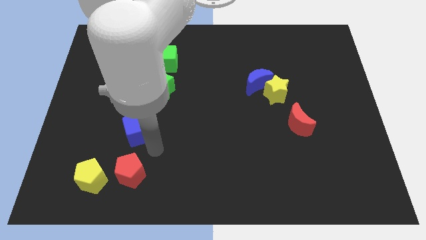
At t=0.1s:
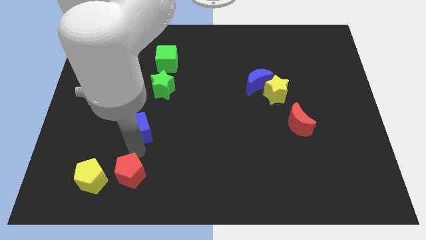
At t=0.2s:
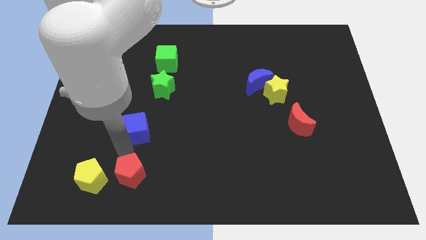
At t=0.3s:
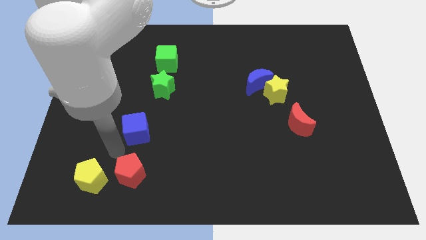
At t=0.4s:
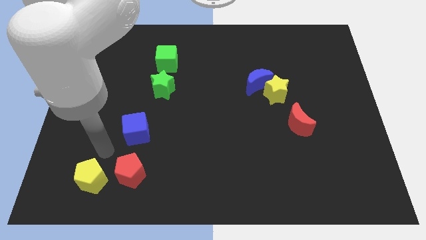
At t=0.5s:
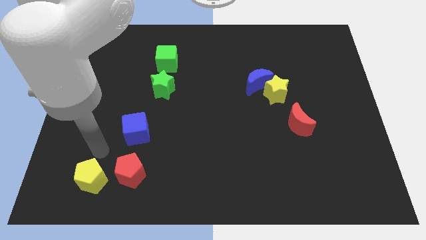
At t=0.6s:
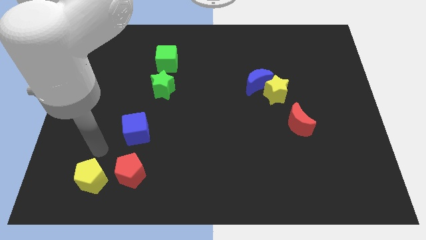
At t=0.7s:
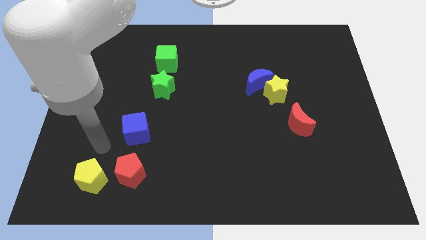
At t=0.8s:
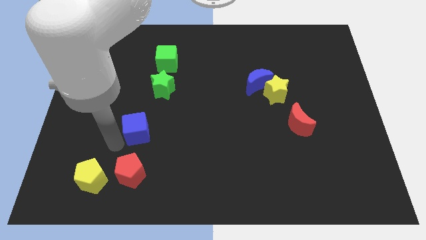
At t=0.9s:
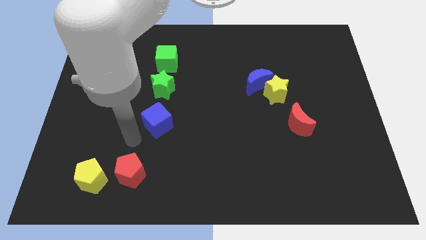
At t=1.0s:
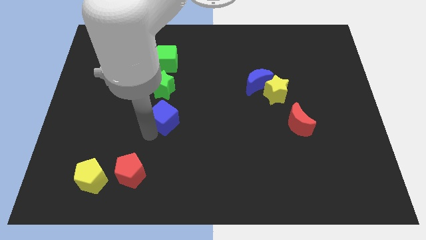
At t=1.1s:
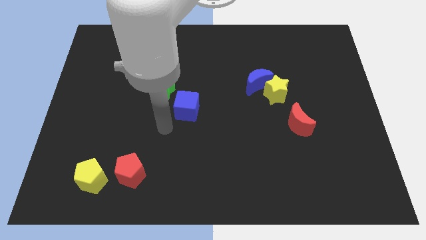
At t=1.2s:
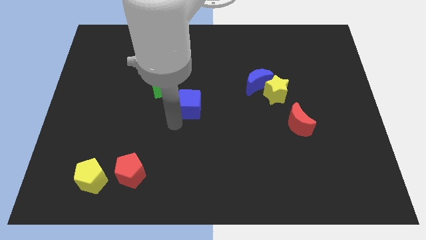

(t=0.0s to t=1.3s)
push blue cube to the bottom right of green star

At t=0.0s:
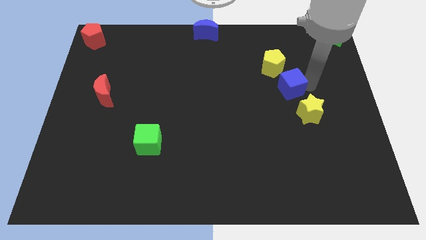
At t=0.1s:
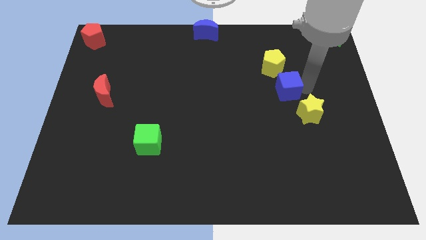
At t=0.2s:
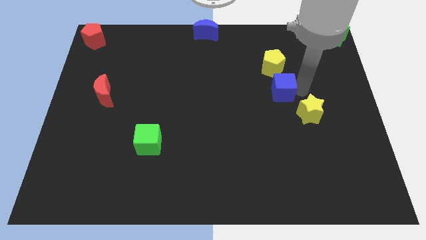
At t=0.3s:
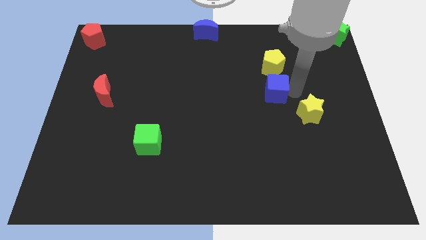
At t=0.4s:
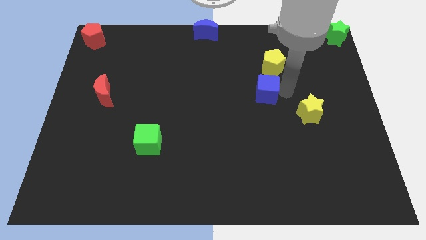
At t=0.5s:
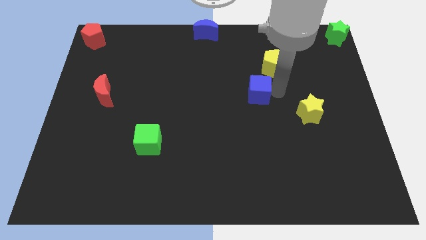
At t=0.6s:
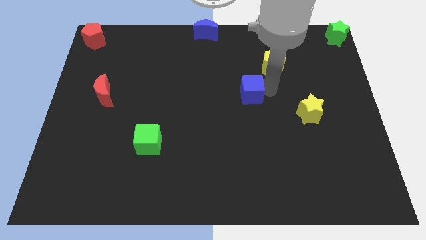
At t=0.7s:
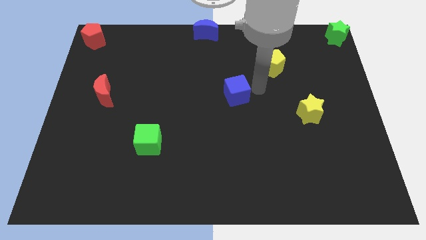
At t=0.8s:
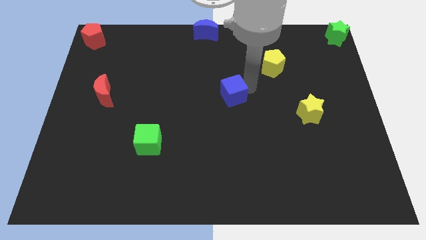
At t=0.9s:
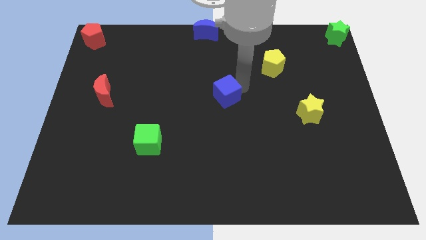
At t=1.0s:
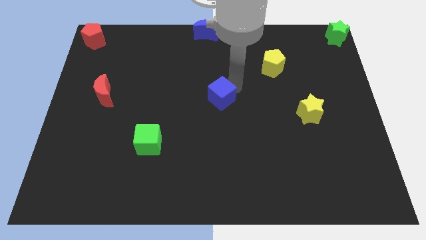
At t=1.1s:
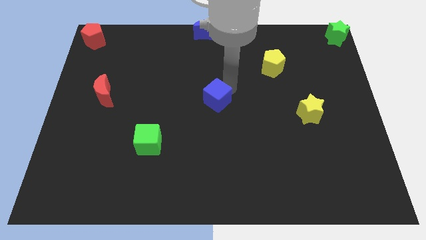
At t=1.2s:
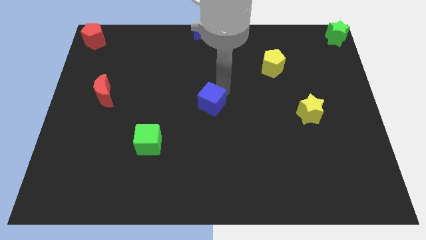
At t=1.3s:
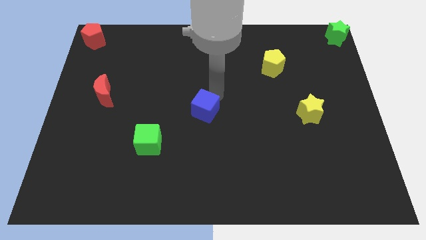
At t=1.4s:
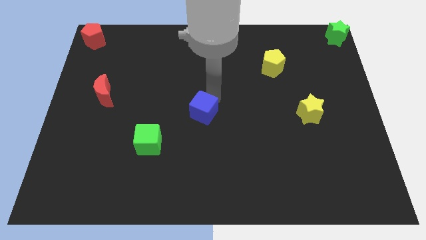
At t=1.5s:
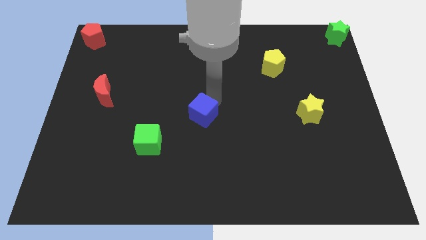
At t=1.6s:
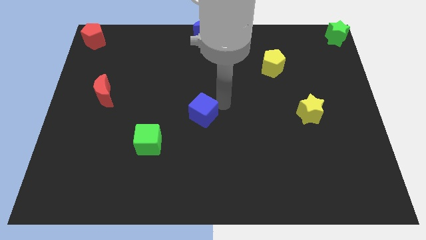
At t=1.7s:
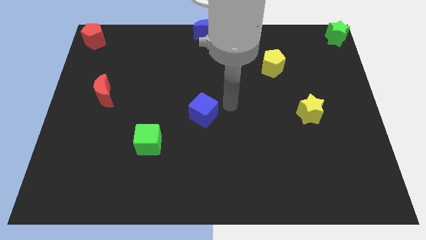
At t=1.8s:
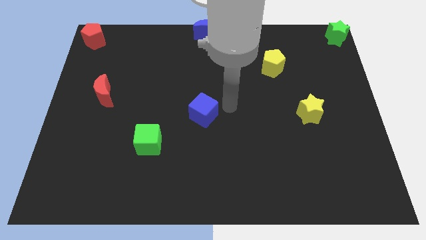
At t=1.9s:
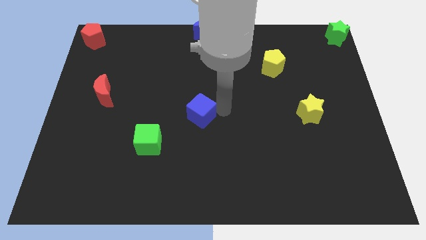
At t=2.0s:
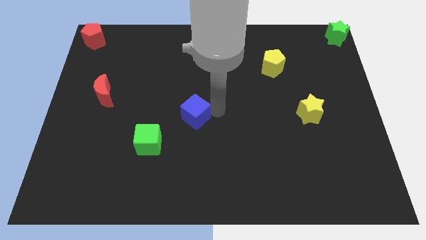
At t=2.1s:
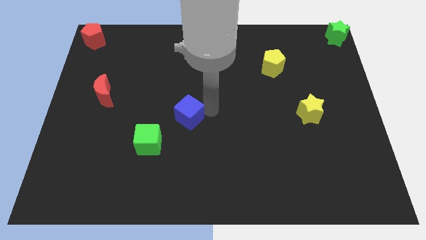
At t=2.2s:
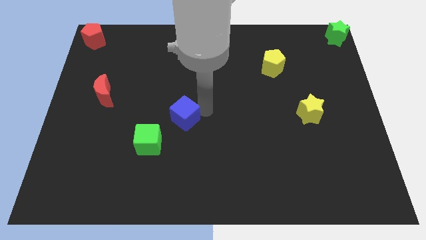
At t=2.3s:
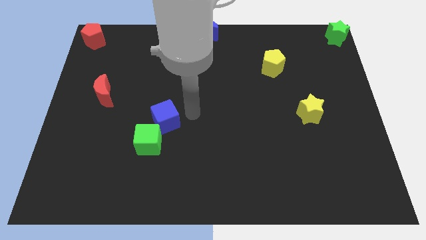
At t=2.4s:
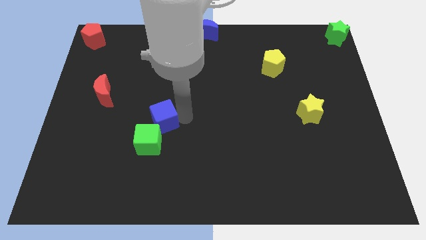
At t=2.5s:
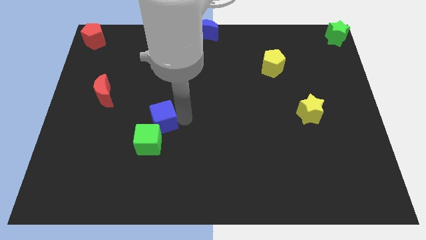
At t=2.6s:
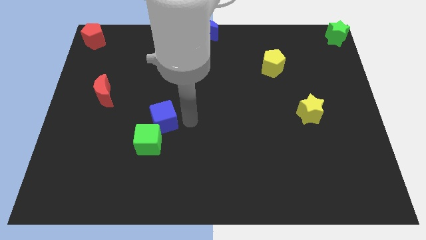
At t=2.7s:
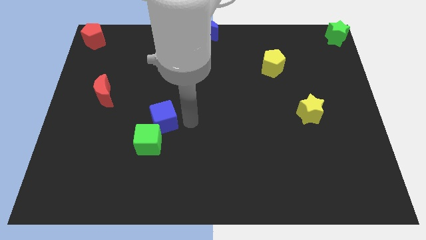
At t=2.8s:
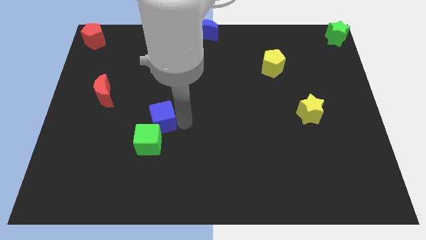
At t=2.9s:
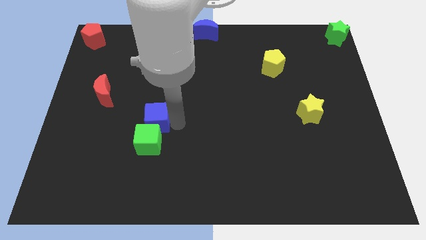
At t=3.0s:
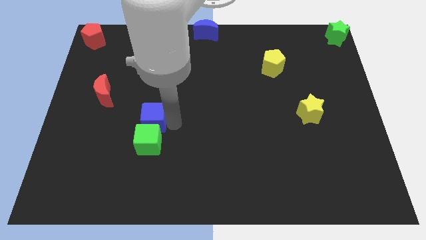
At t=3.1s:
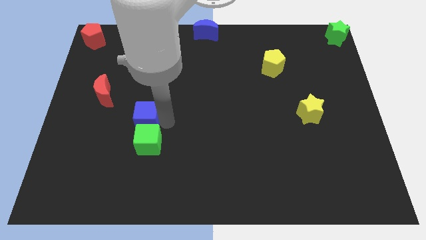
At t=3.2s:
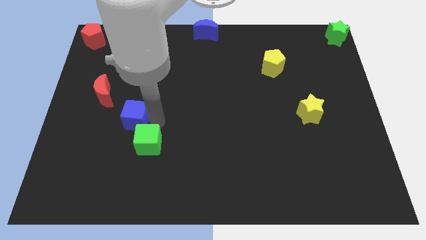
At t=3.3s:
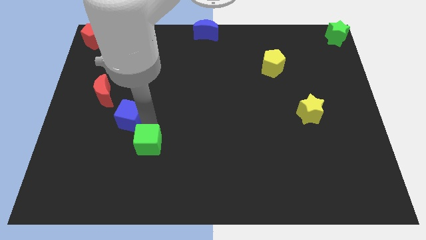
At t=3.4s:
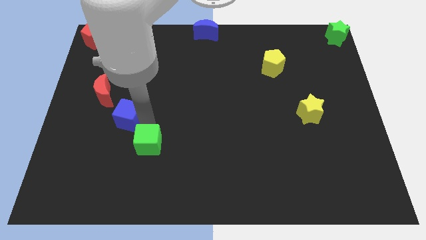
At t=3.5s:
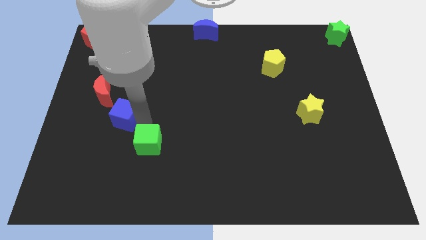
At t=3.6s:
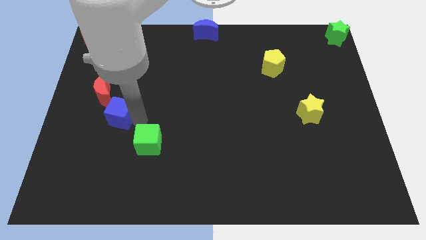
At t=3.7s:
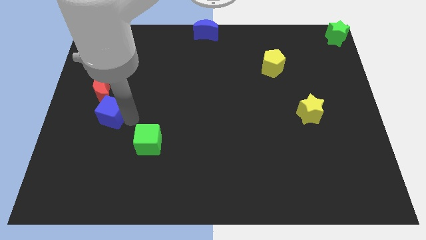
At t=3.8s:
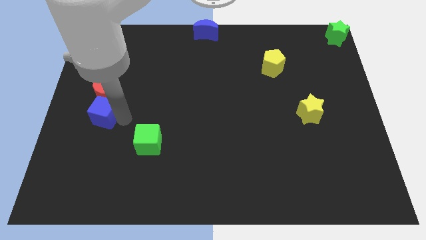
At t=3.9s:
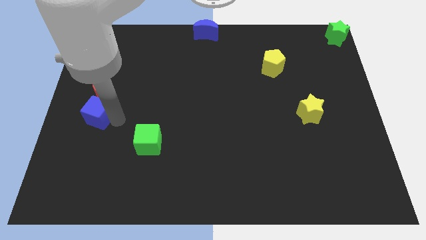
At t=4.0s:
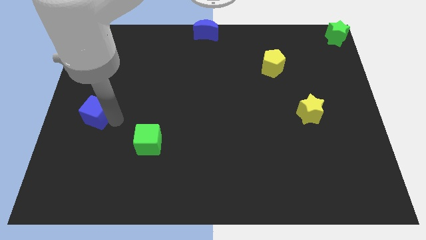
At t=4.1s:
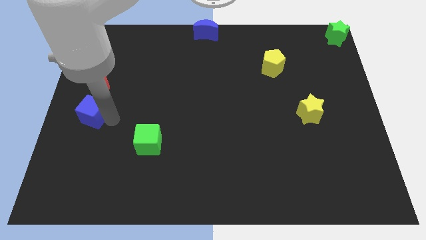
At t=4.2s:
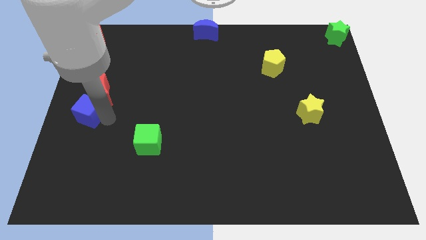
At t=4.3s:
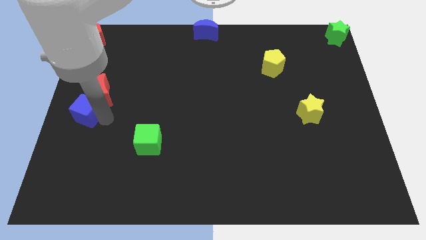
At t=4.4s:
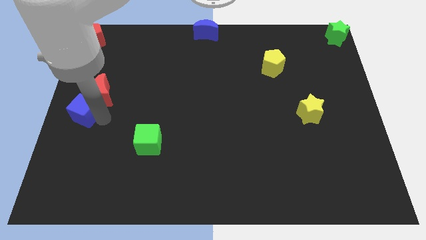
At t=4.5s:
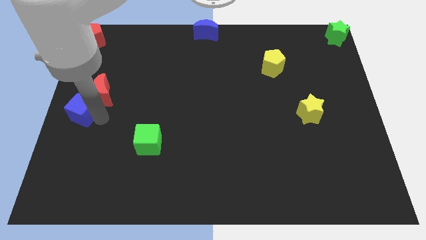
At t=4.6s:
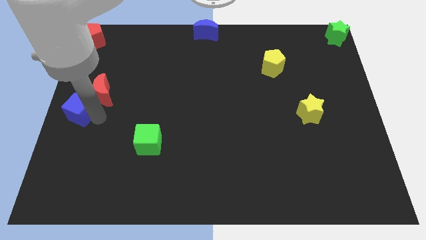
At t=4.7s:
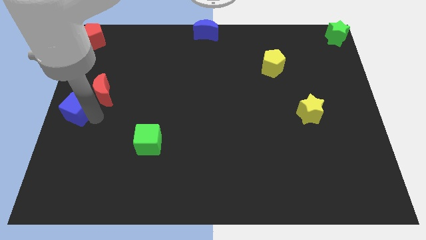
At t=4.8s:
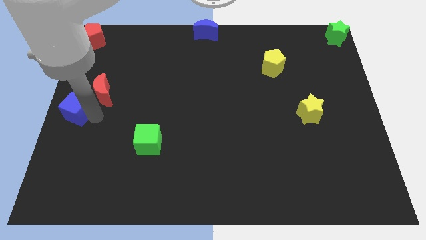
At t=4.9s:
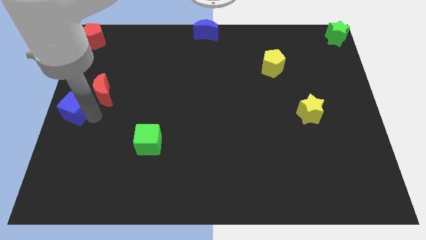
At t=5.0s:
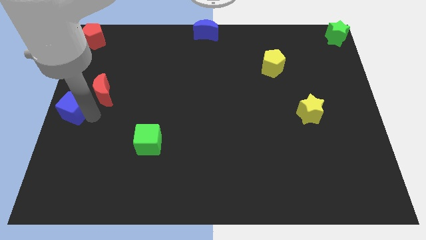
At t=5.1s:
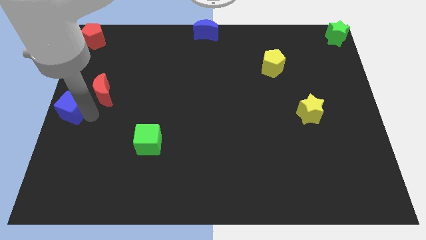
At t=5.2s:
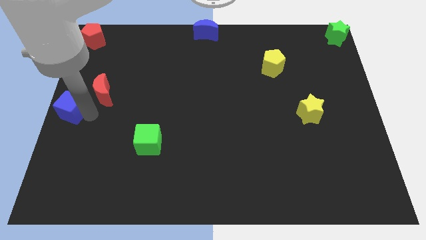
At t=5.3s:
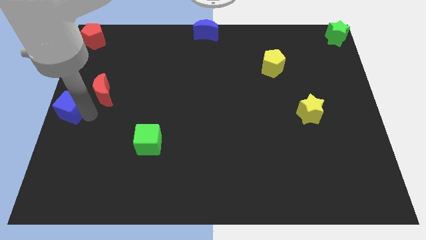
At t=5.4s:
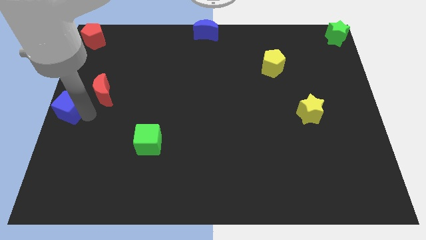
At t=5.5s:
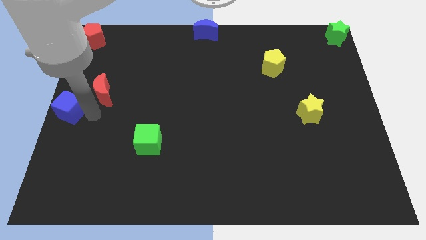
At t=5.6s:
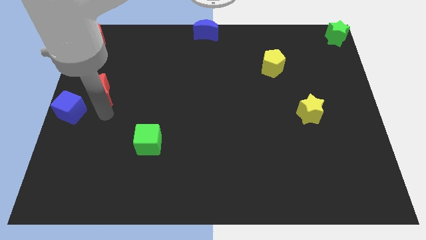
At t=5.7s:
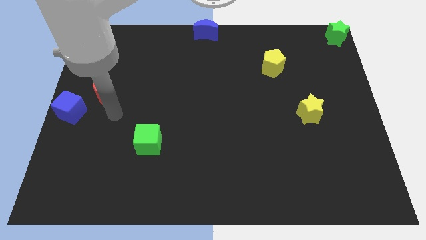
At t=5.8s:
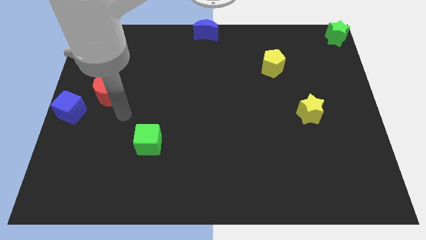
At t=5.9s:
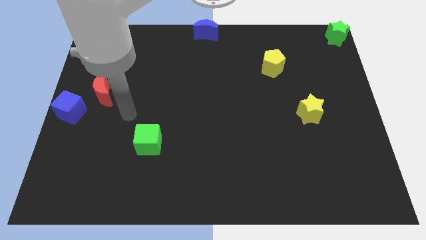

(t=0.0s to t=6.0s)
push the blue cube towards left center of the board

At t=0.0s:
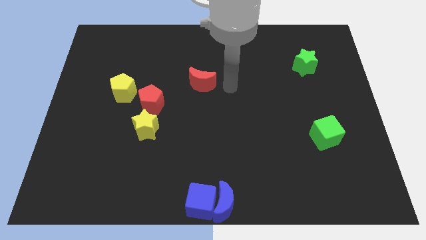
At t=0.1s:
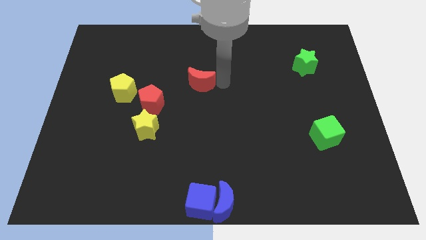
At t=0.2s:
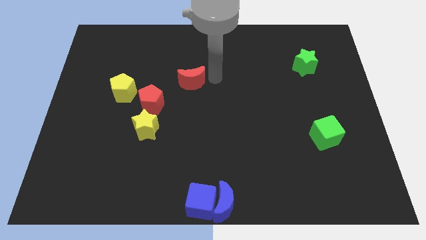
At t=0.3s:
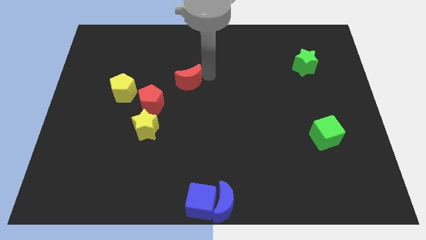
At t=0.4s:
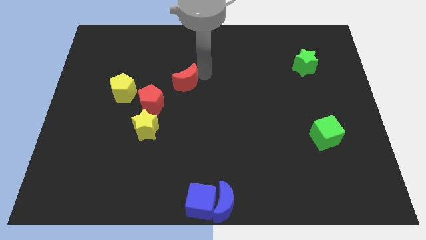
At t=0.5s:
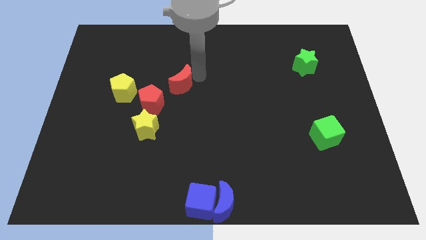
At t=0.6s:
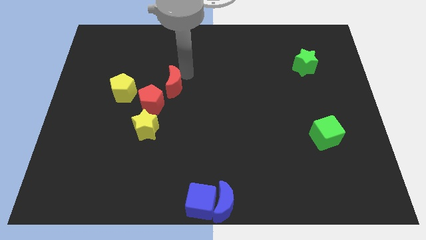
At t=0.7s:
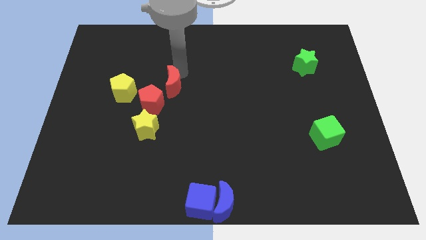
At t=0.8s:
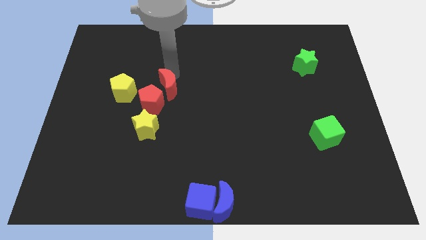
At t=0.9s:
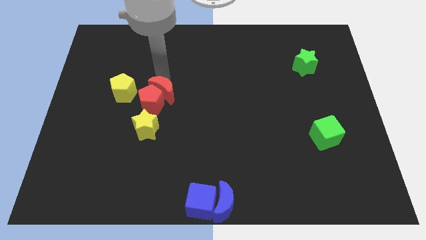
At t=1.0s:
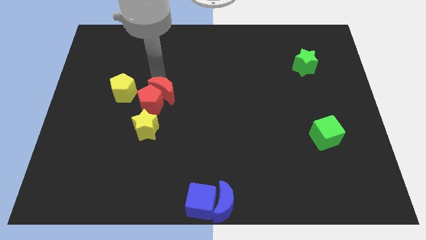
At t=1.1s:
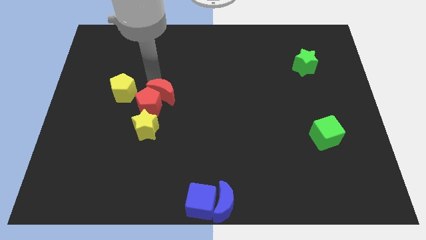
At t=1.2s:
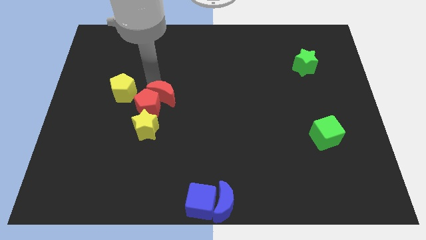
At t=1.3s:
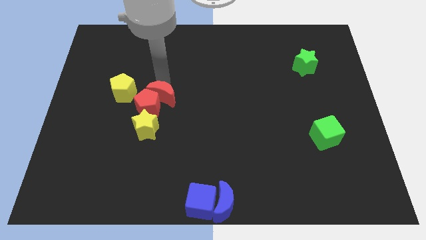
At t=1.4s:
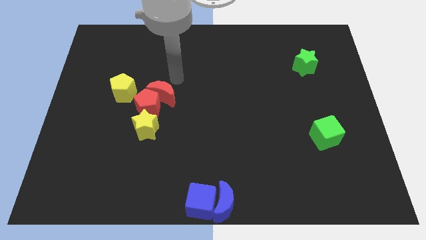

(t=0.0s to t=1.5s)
move the red moon into the red pentagon

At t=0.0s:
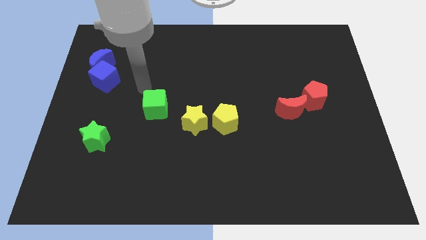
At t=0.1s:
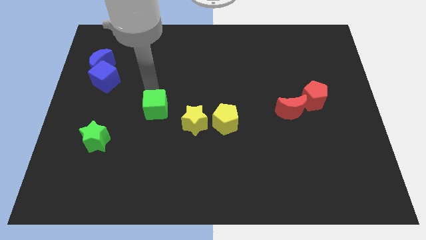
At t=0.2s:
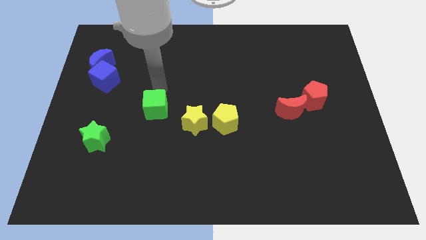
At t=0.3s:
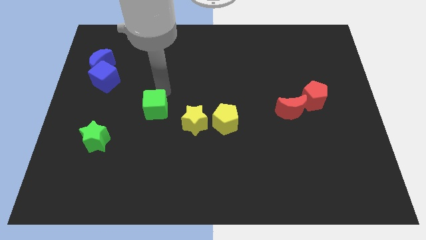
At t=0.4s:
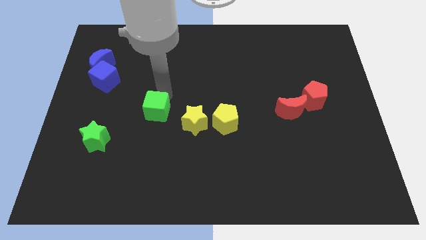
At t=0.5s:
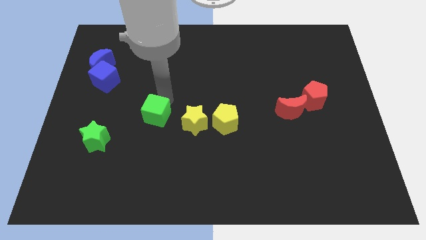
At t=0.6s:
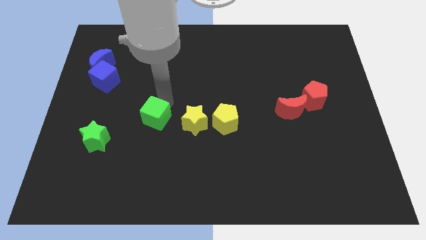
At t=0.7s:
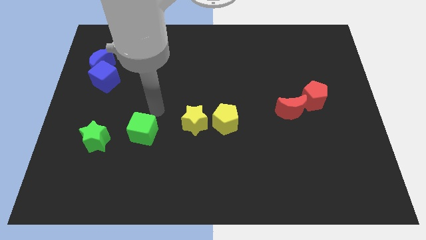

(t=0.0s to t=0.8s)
push green cube slightly towards down
